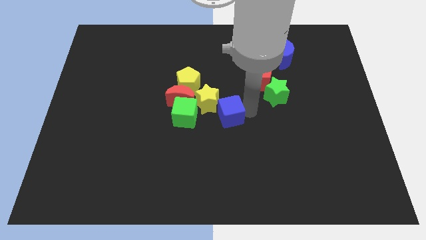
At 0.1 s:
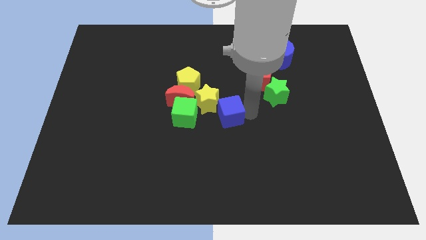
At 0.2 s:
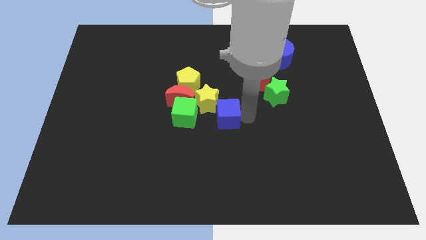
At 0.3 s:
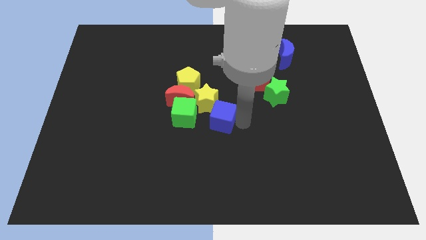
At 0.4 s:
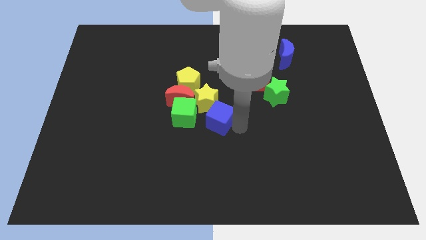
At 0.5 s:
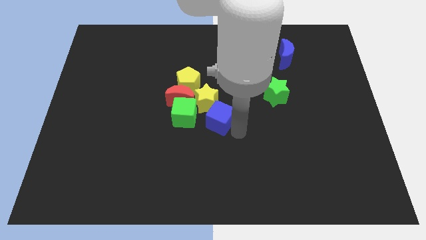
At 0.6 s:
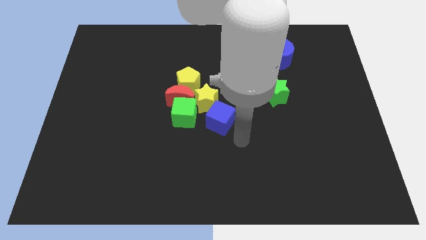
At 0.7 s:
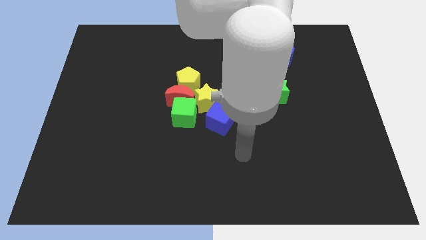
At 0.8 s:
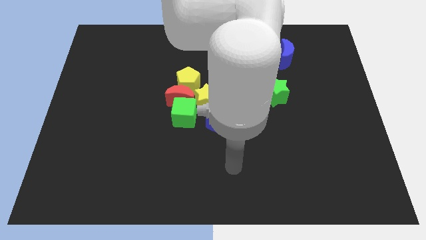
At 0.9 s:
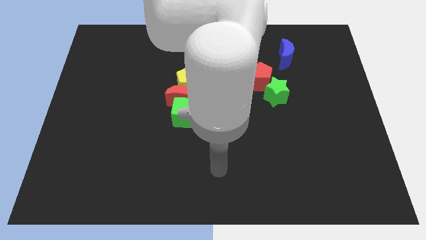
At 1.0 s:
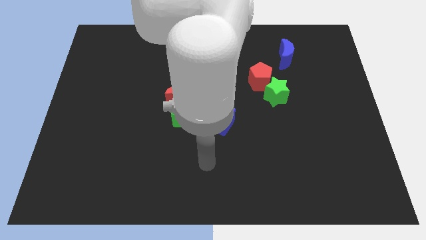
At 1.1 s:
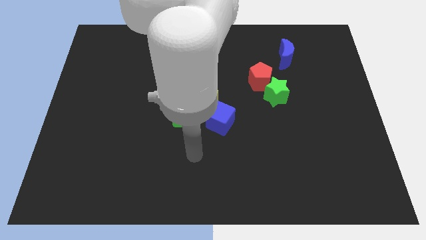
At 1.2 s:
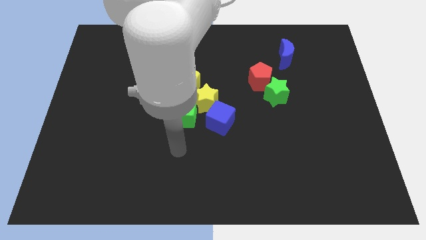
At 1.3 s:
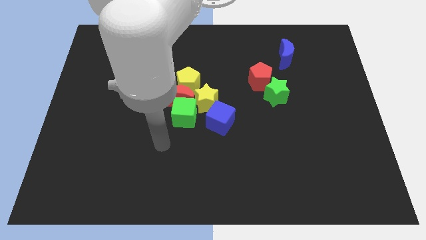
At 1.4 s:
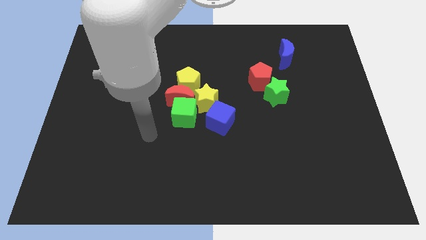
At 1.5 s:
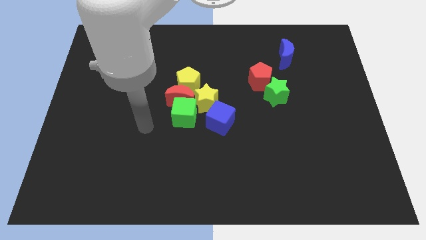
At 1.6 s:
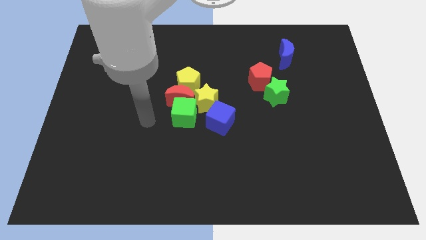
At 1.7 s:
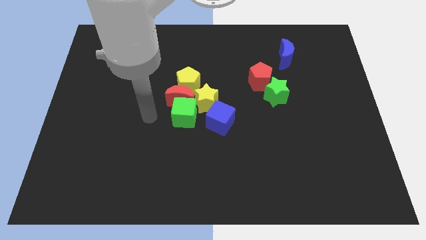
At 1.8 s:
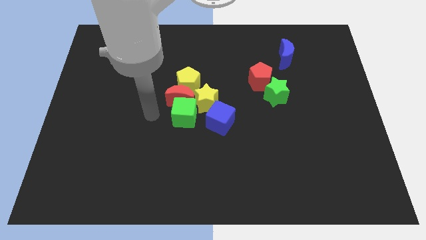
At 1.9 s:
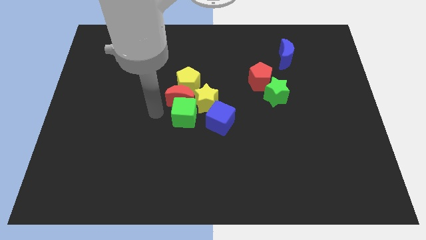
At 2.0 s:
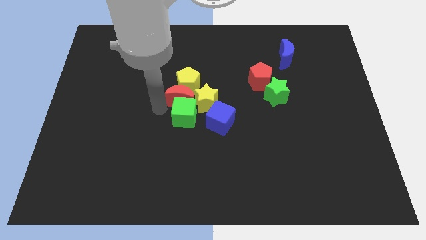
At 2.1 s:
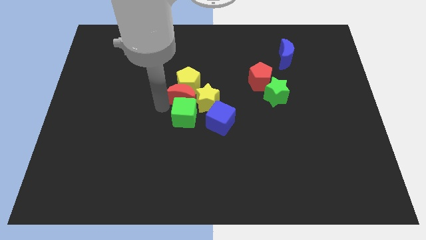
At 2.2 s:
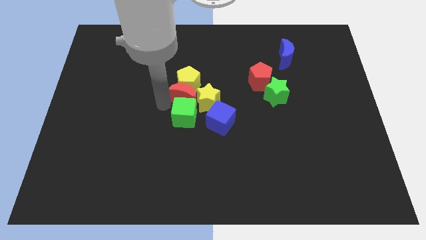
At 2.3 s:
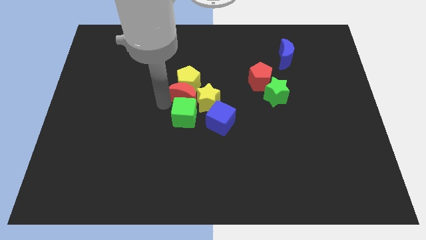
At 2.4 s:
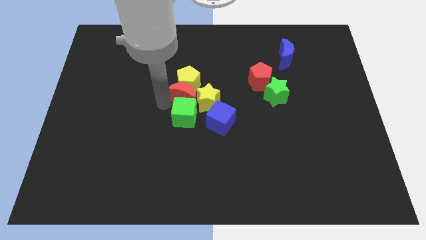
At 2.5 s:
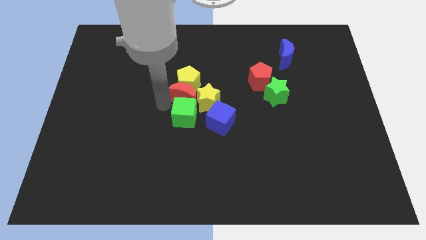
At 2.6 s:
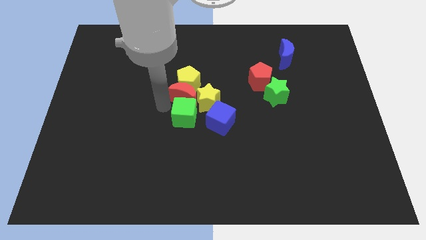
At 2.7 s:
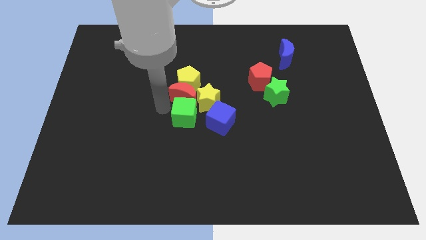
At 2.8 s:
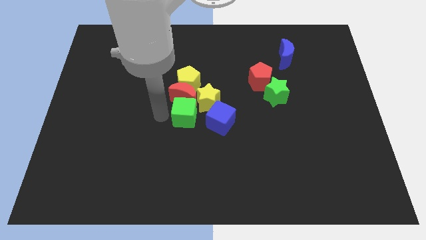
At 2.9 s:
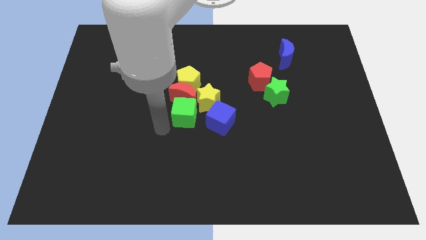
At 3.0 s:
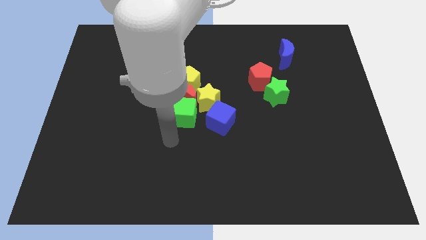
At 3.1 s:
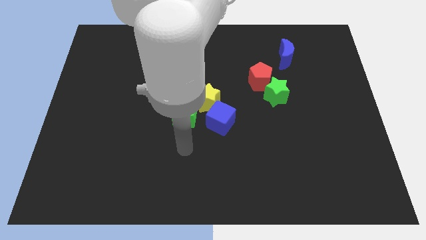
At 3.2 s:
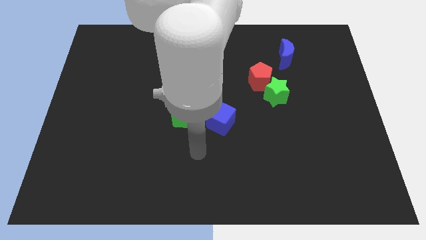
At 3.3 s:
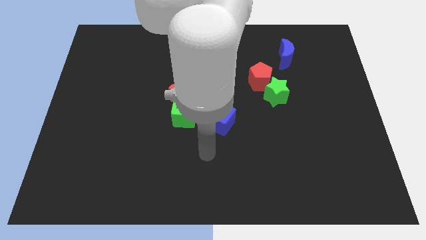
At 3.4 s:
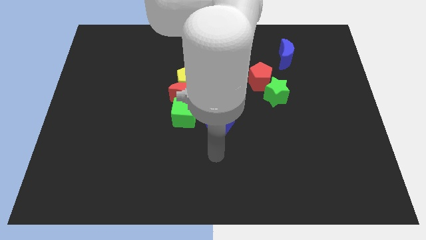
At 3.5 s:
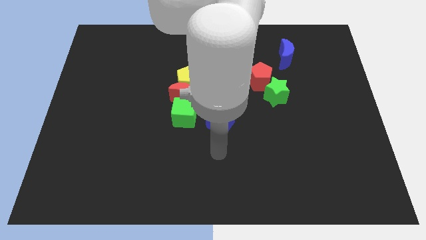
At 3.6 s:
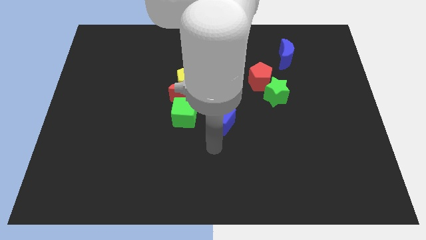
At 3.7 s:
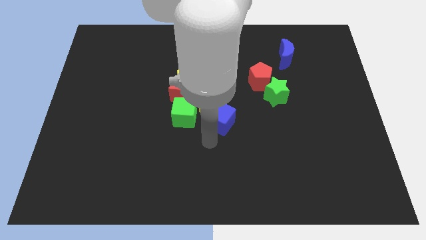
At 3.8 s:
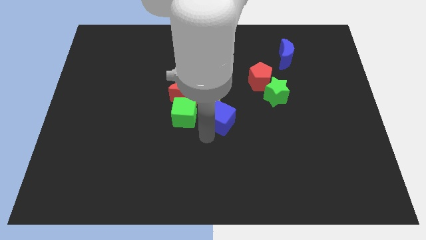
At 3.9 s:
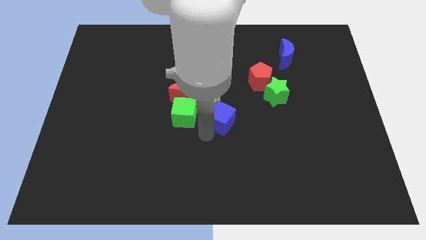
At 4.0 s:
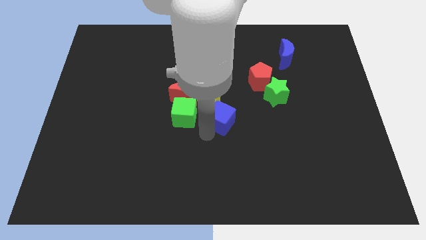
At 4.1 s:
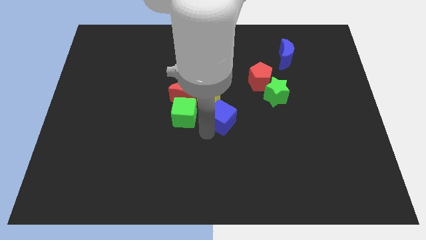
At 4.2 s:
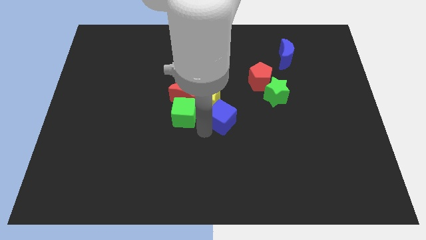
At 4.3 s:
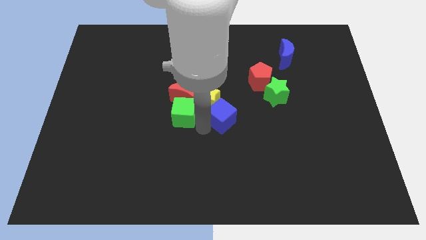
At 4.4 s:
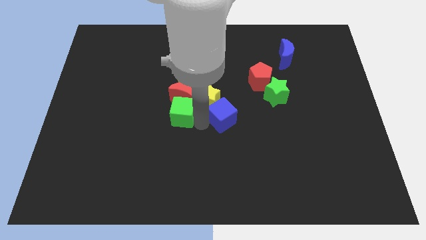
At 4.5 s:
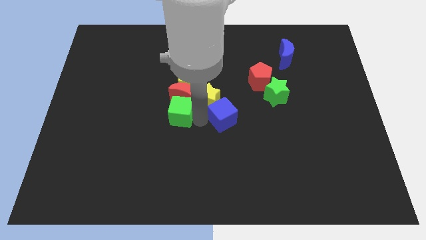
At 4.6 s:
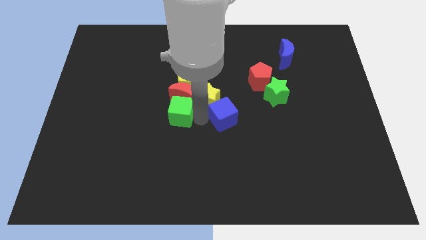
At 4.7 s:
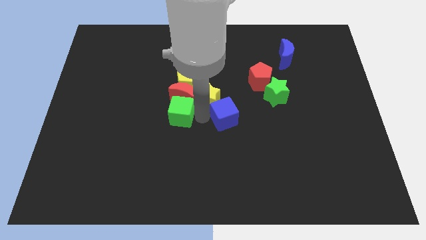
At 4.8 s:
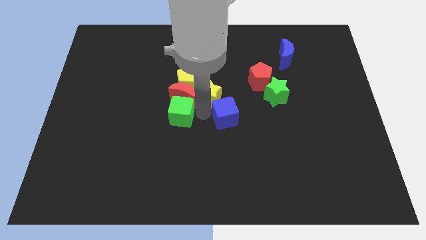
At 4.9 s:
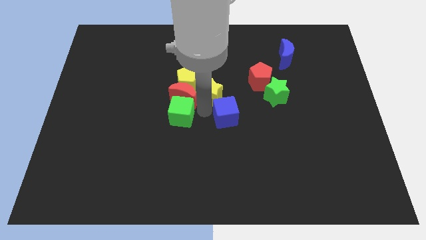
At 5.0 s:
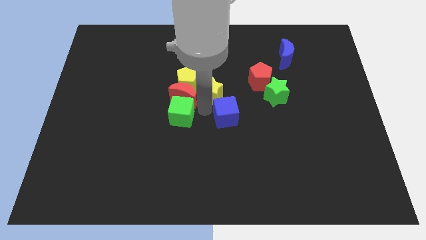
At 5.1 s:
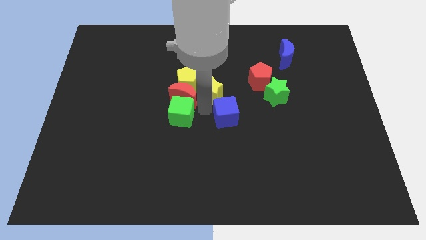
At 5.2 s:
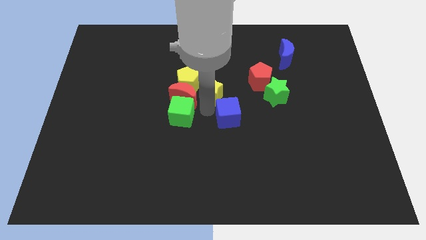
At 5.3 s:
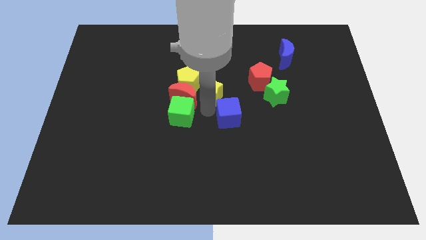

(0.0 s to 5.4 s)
slightly push the blue cube away from the yellow star

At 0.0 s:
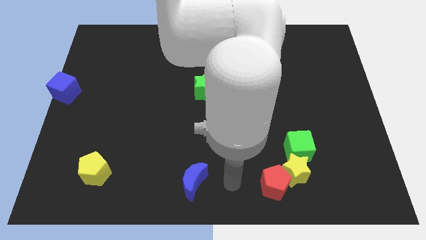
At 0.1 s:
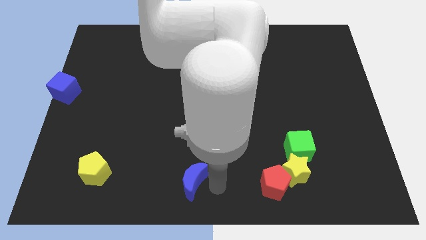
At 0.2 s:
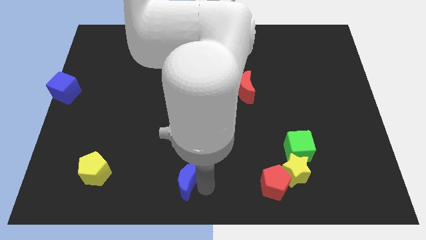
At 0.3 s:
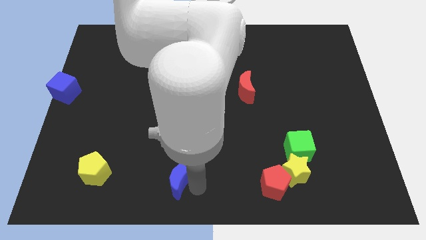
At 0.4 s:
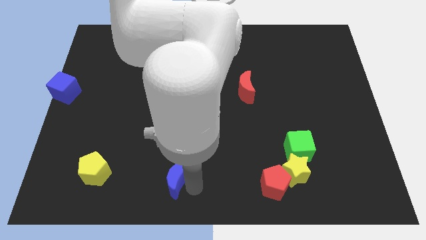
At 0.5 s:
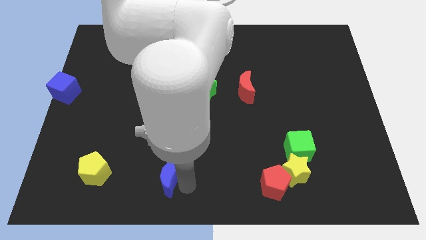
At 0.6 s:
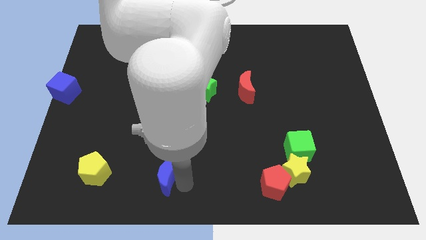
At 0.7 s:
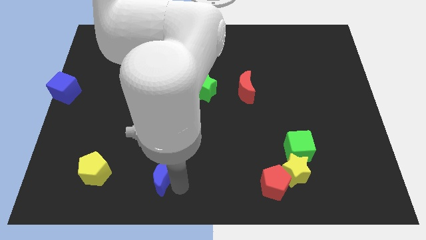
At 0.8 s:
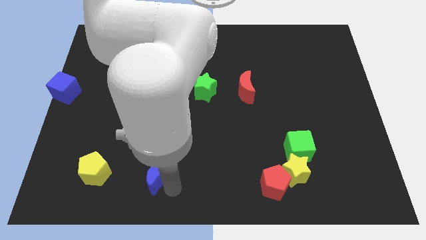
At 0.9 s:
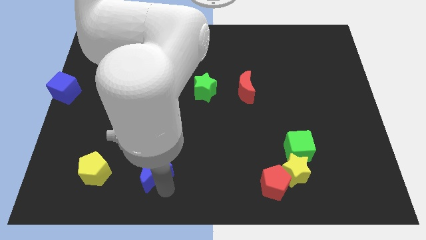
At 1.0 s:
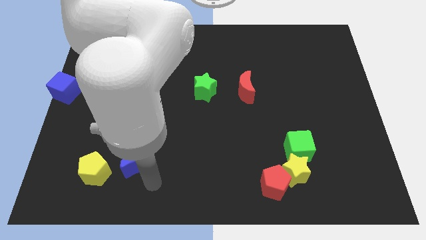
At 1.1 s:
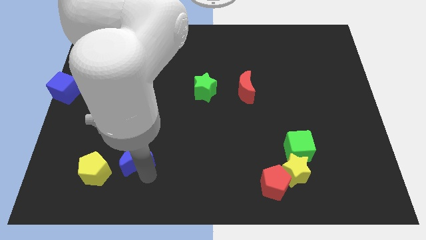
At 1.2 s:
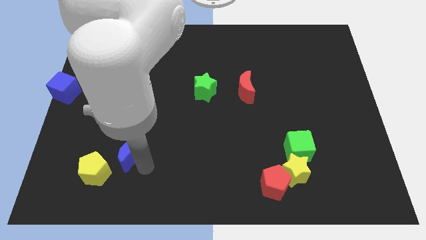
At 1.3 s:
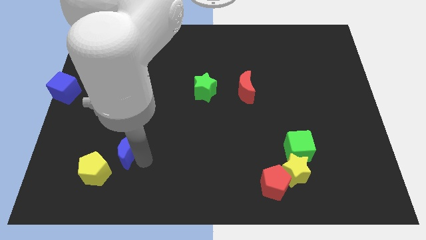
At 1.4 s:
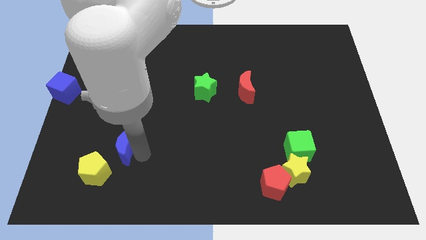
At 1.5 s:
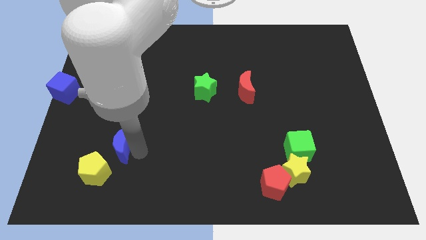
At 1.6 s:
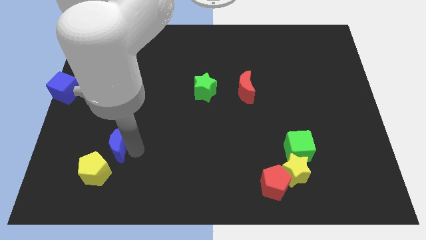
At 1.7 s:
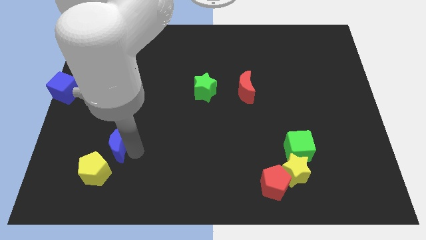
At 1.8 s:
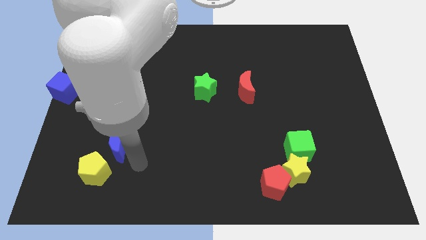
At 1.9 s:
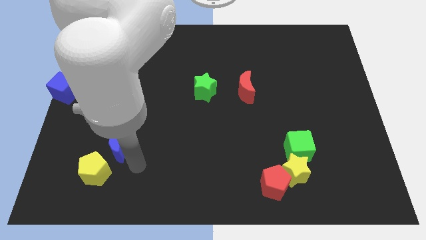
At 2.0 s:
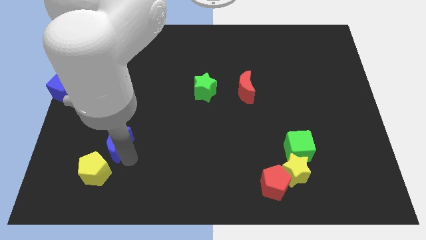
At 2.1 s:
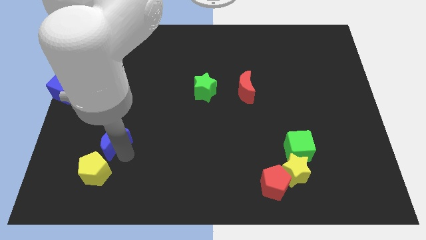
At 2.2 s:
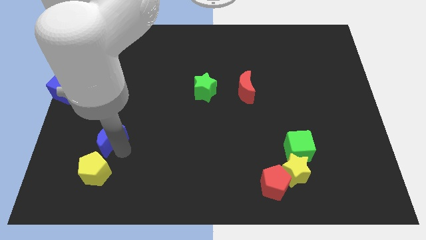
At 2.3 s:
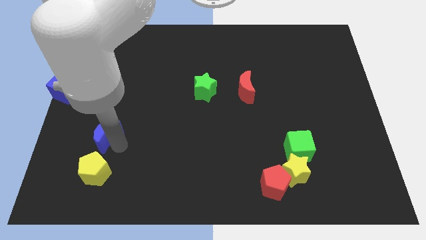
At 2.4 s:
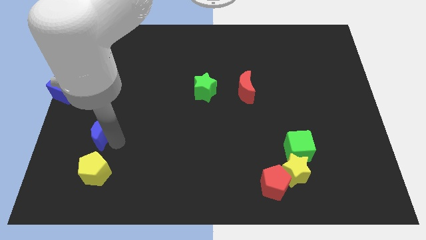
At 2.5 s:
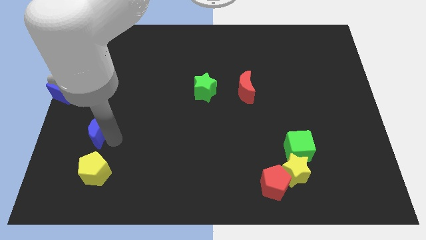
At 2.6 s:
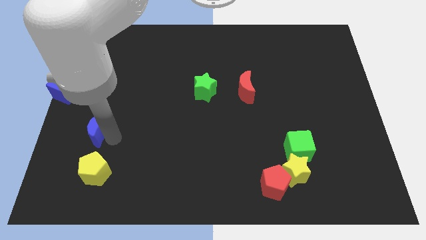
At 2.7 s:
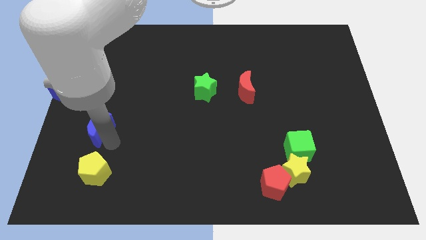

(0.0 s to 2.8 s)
move the blue moon above the yellow pentagon

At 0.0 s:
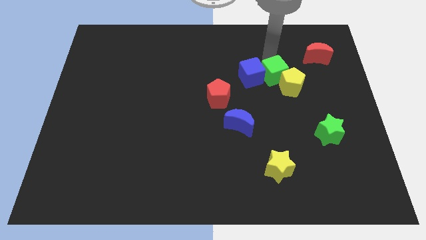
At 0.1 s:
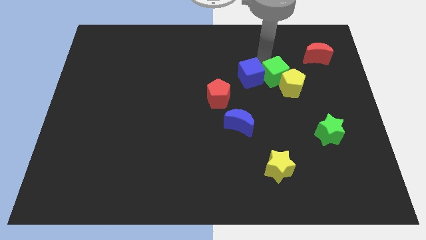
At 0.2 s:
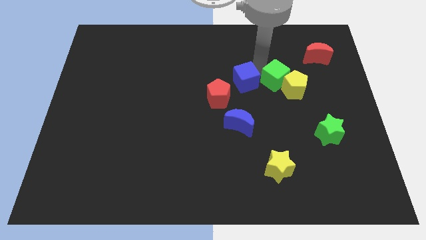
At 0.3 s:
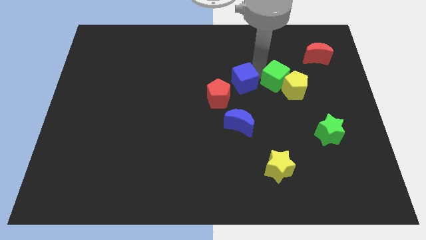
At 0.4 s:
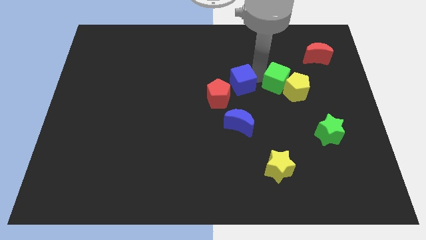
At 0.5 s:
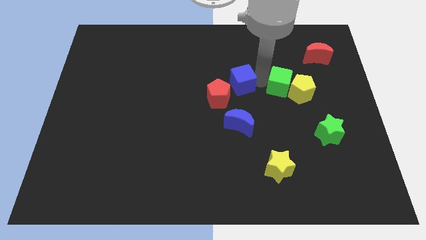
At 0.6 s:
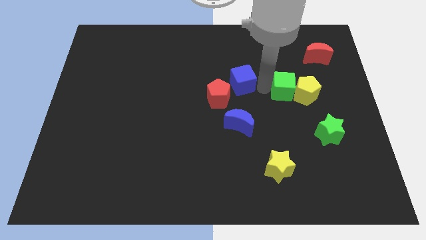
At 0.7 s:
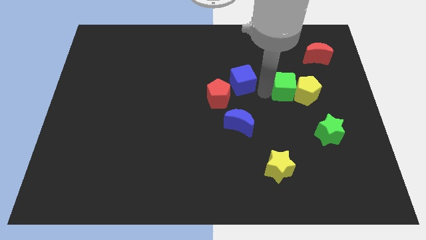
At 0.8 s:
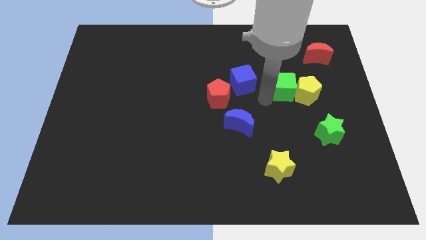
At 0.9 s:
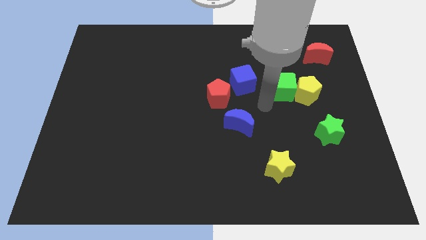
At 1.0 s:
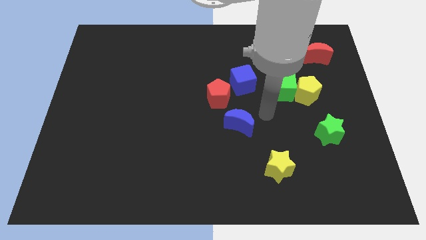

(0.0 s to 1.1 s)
separate green and blue cubes from each other
